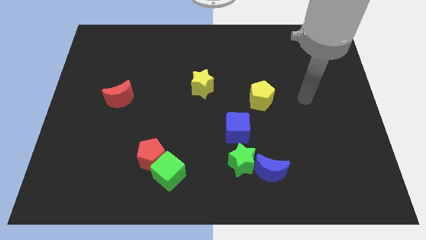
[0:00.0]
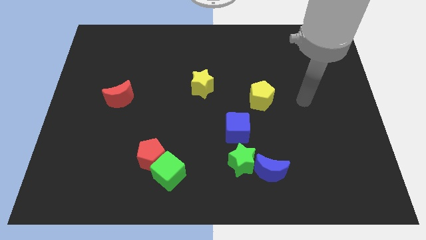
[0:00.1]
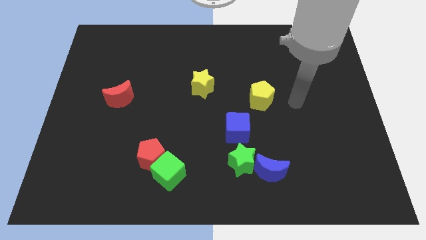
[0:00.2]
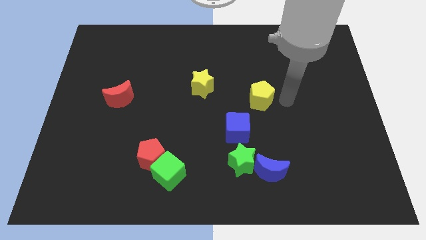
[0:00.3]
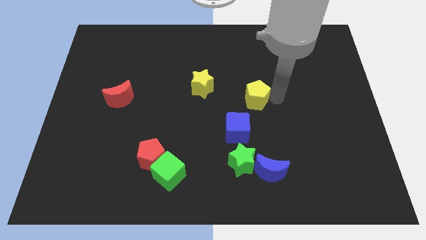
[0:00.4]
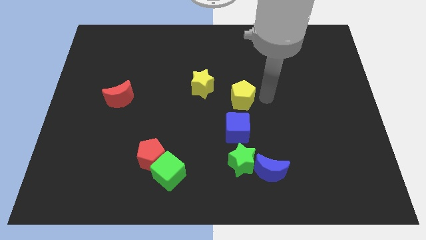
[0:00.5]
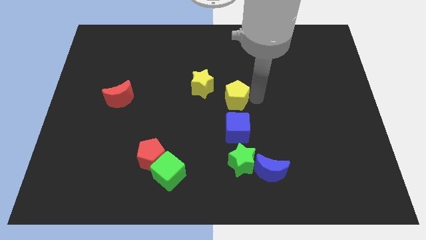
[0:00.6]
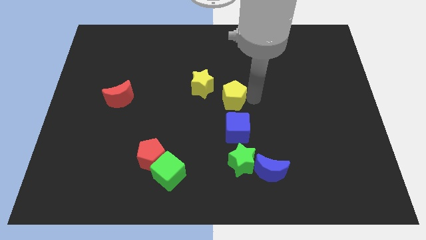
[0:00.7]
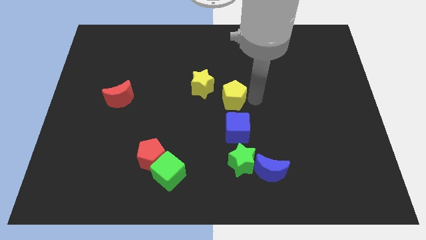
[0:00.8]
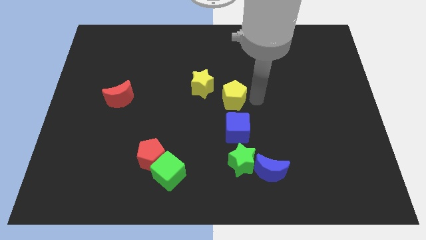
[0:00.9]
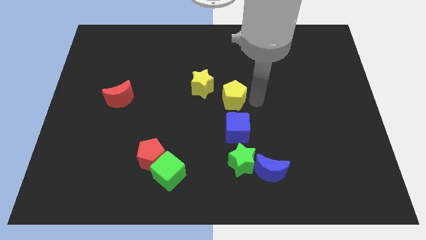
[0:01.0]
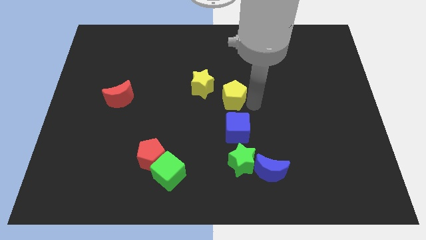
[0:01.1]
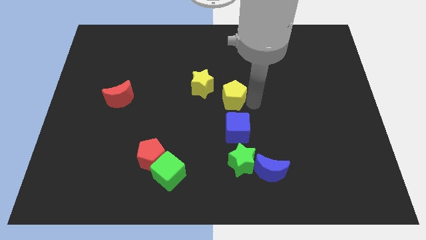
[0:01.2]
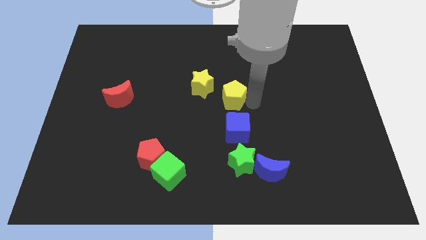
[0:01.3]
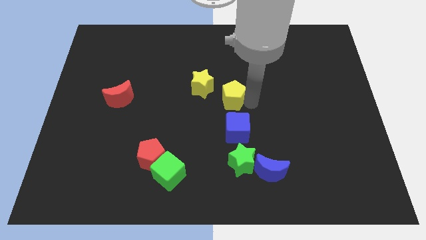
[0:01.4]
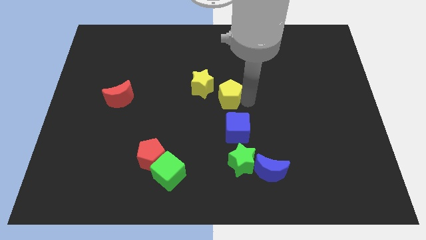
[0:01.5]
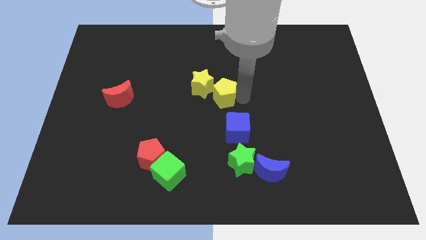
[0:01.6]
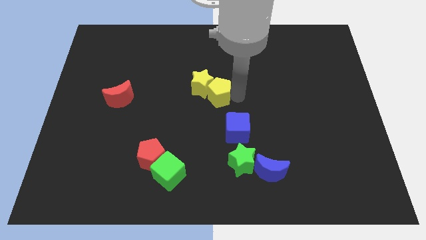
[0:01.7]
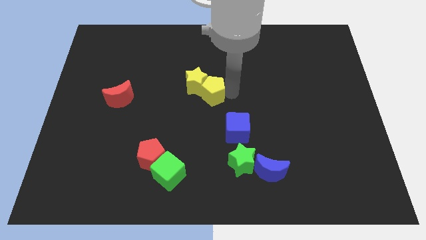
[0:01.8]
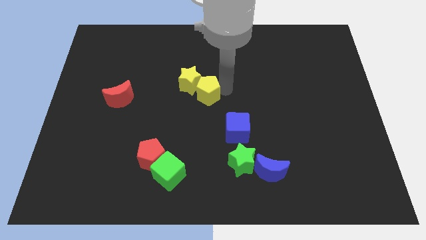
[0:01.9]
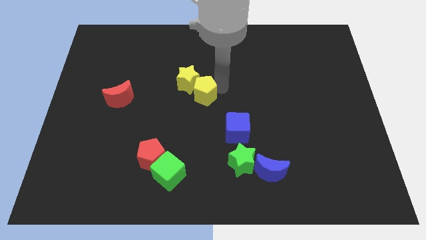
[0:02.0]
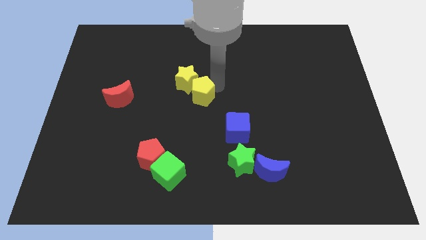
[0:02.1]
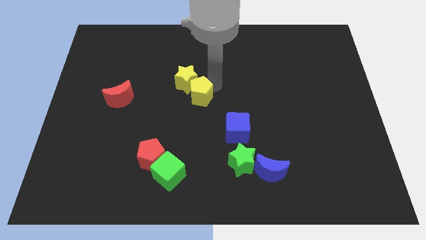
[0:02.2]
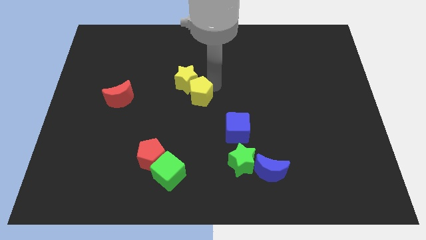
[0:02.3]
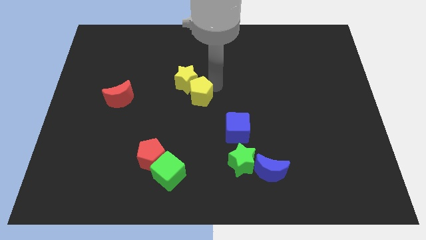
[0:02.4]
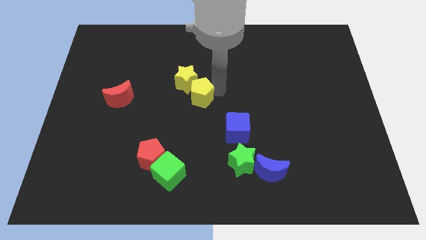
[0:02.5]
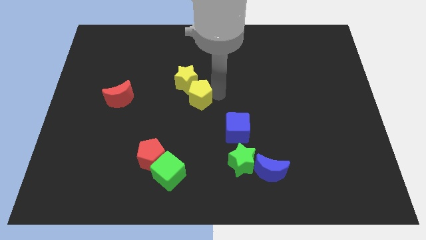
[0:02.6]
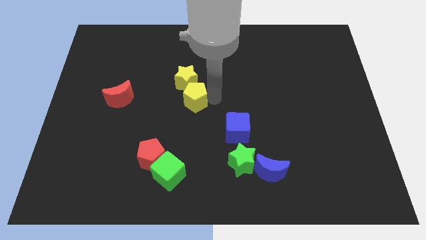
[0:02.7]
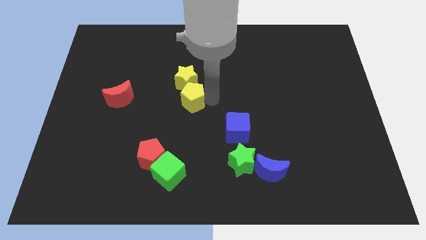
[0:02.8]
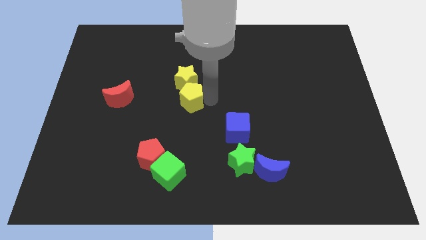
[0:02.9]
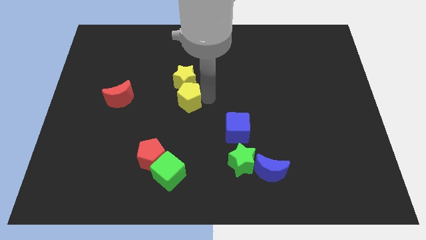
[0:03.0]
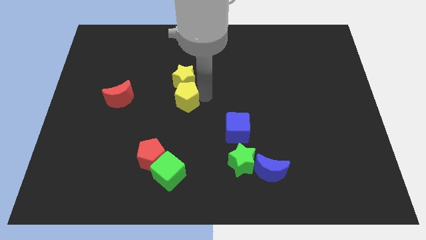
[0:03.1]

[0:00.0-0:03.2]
push yellow pentagon below yellow star

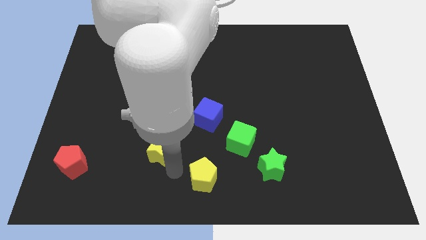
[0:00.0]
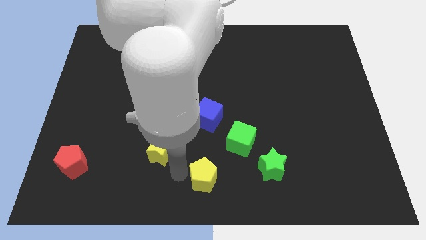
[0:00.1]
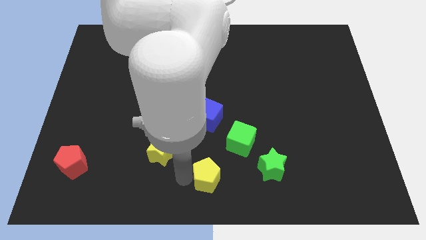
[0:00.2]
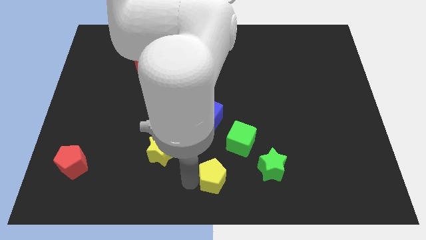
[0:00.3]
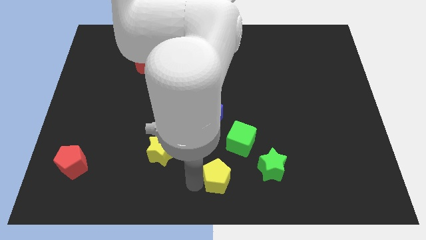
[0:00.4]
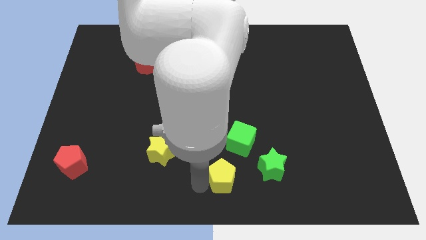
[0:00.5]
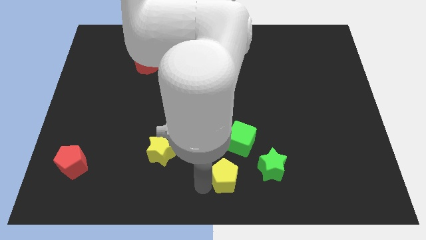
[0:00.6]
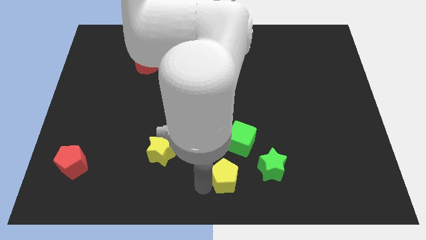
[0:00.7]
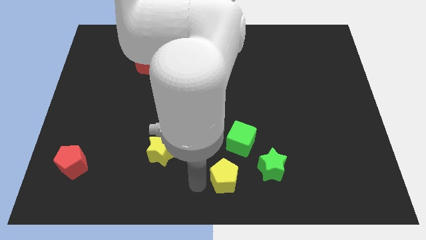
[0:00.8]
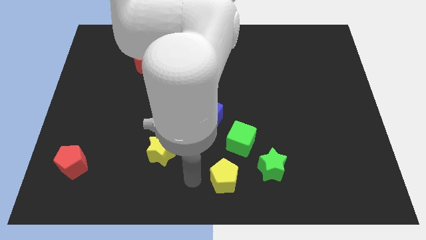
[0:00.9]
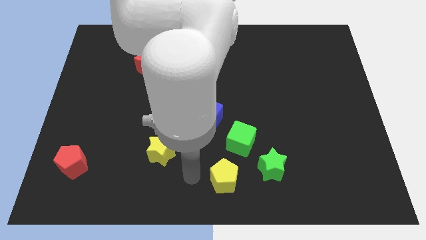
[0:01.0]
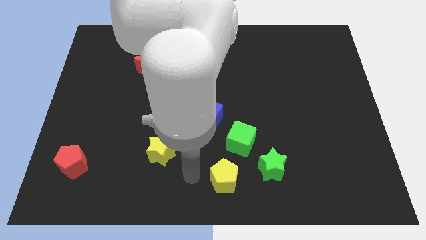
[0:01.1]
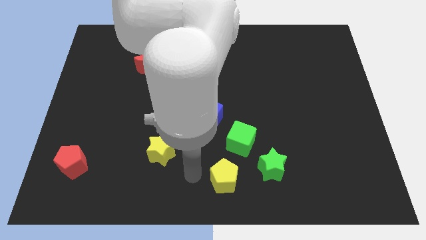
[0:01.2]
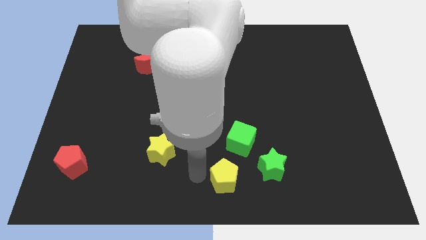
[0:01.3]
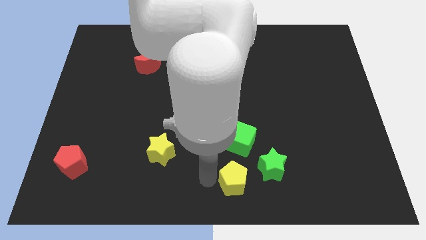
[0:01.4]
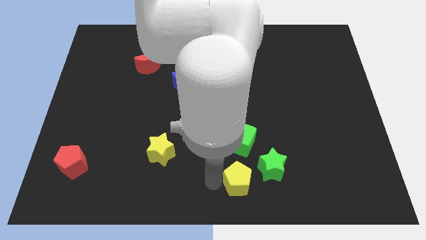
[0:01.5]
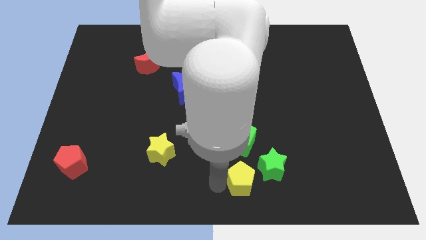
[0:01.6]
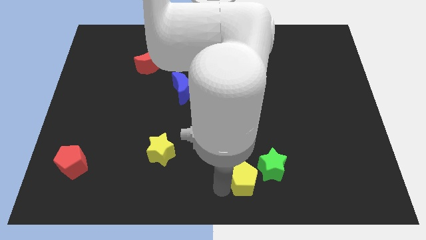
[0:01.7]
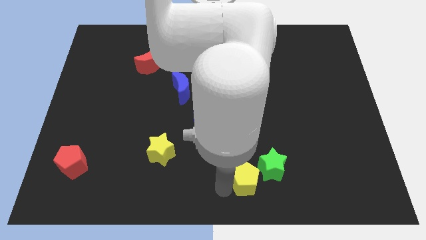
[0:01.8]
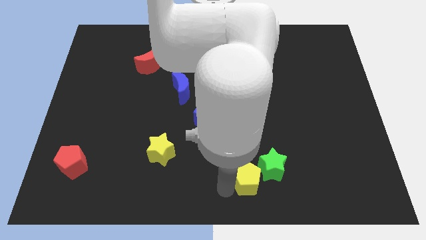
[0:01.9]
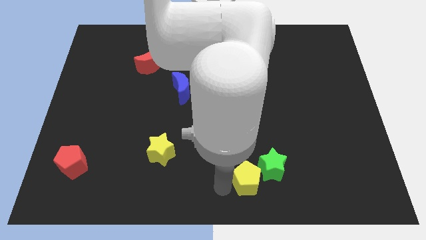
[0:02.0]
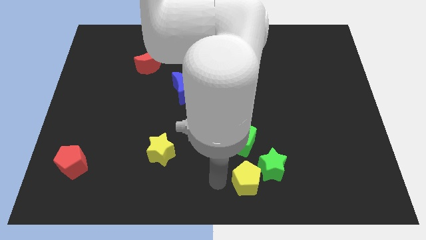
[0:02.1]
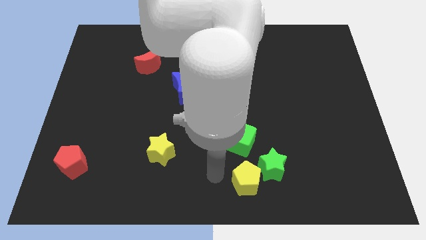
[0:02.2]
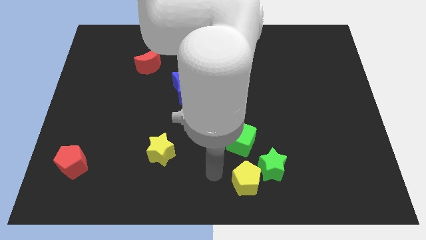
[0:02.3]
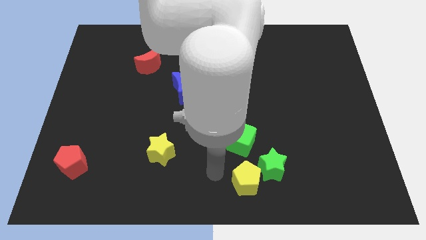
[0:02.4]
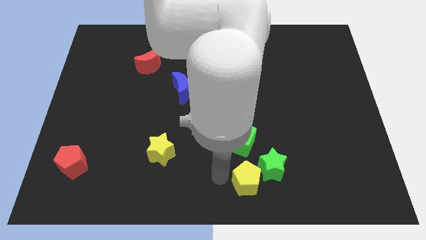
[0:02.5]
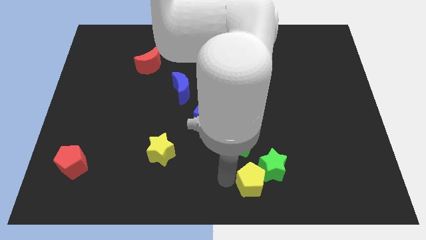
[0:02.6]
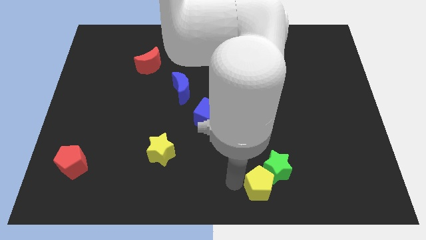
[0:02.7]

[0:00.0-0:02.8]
move the yellow pentagon into the green star

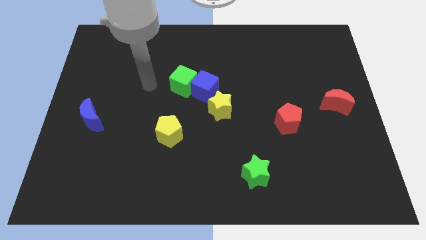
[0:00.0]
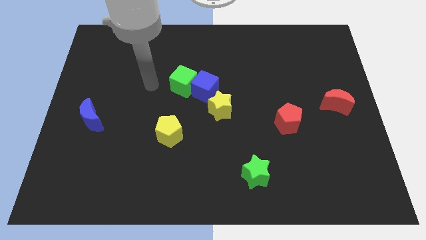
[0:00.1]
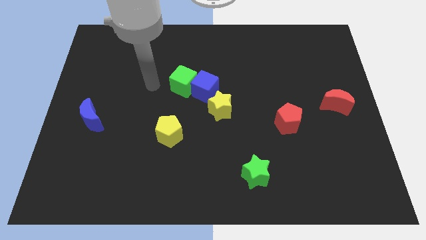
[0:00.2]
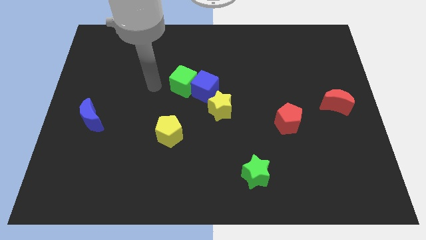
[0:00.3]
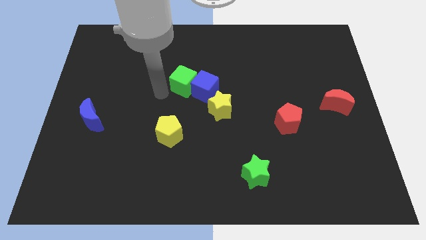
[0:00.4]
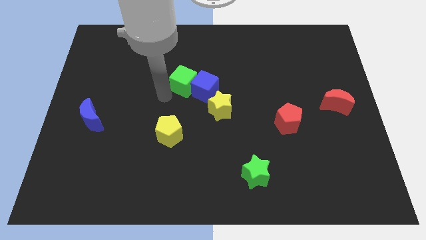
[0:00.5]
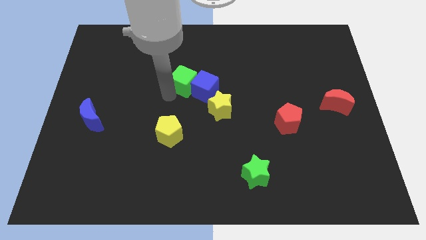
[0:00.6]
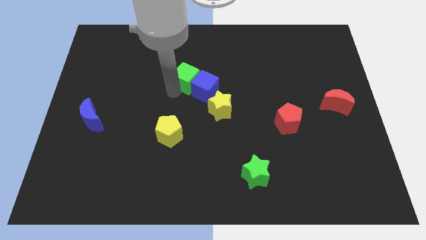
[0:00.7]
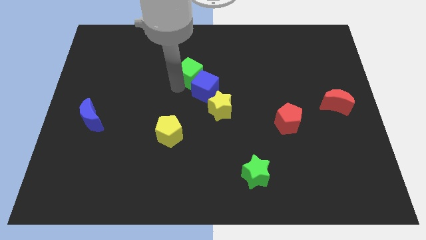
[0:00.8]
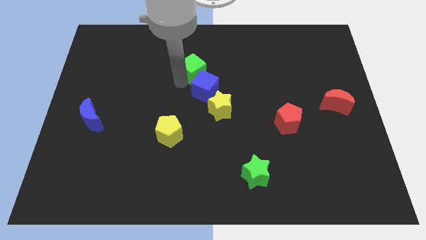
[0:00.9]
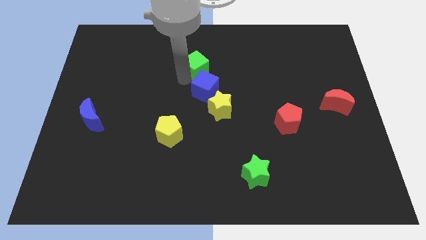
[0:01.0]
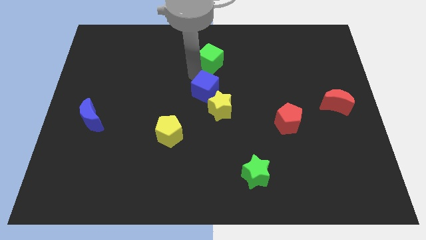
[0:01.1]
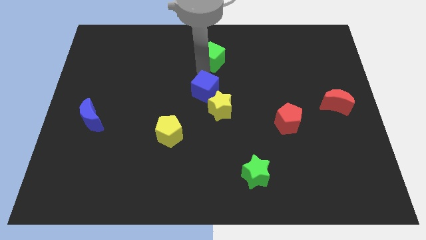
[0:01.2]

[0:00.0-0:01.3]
separate the green cube from blue cube

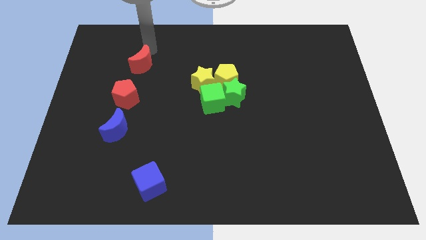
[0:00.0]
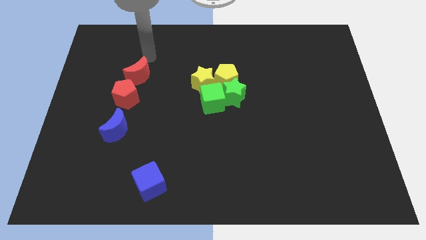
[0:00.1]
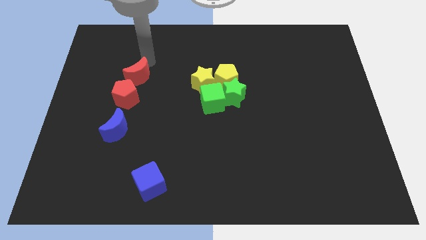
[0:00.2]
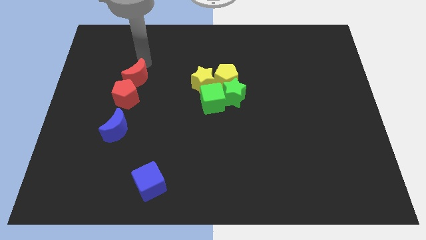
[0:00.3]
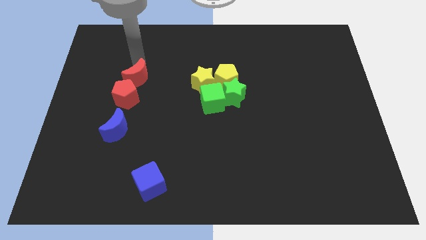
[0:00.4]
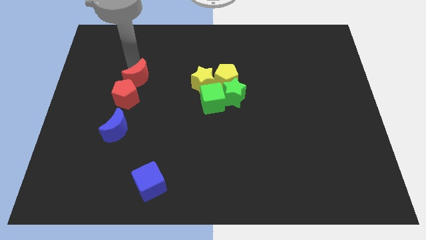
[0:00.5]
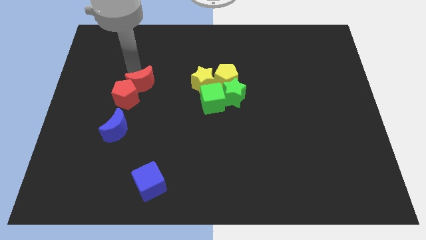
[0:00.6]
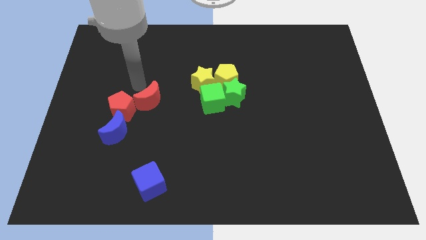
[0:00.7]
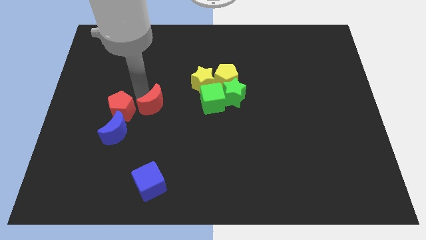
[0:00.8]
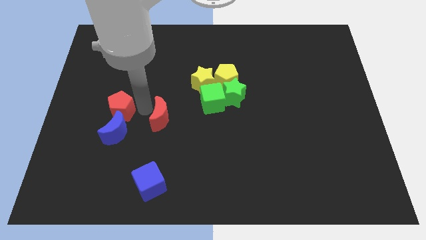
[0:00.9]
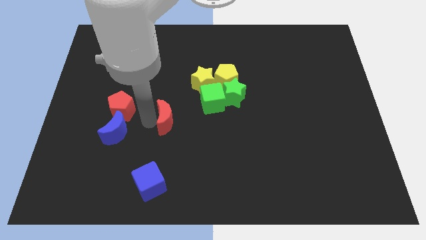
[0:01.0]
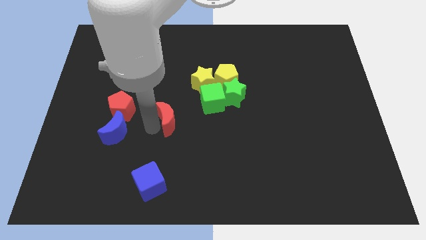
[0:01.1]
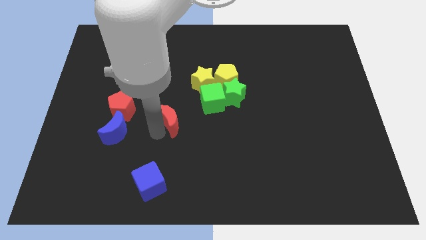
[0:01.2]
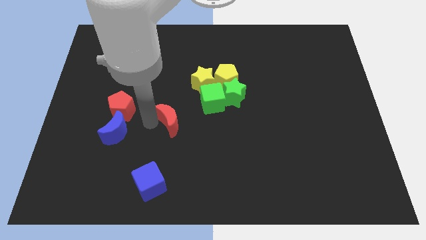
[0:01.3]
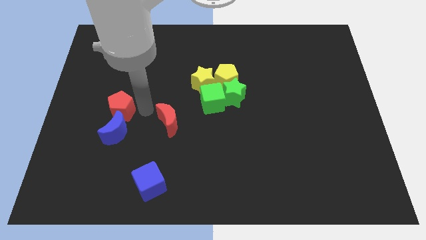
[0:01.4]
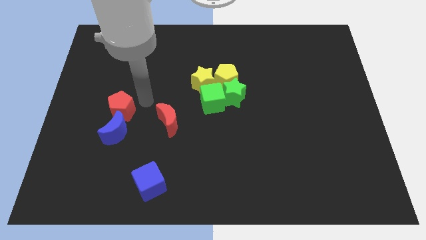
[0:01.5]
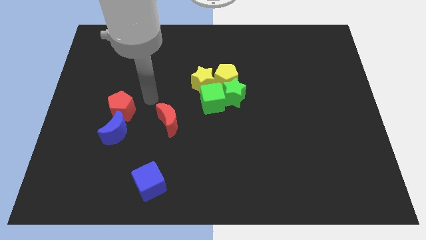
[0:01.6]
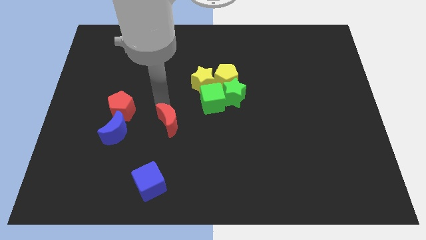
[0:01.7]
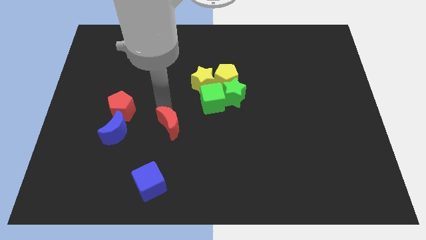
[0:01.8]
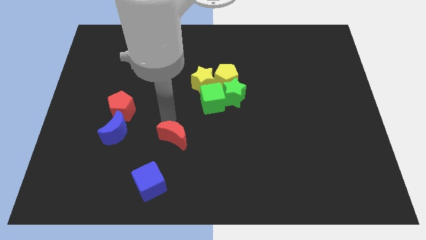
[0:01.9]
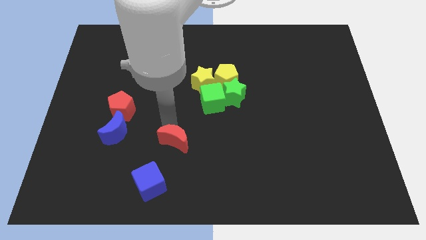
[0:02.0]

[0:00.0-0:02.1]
place the red moon to the right of blue moon
